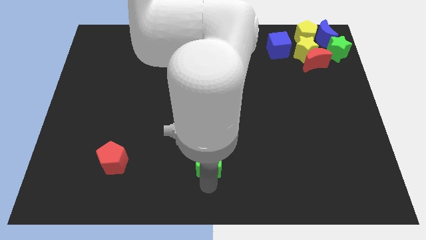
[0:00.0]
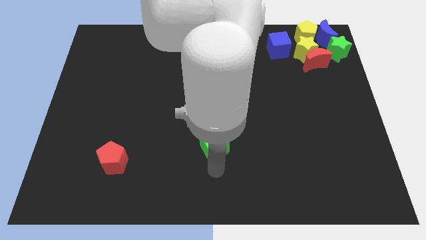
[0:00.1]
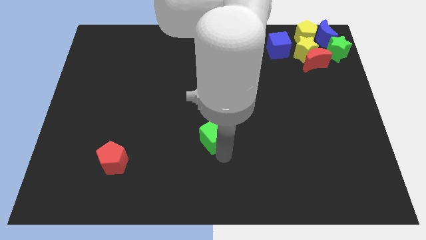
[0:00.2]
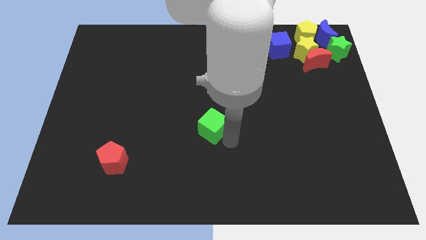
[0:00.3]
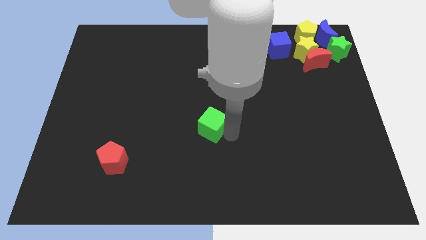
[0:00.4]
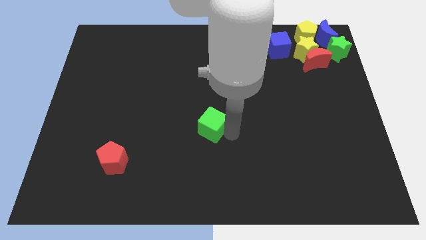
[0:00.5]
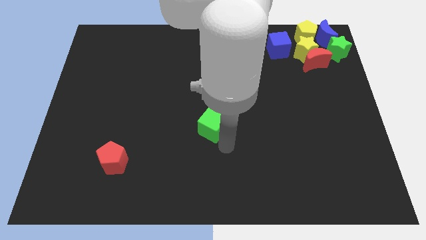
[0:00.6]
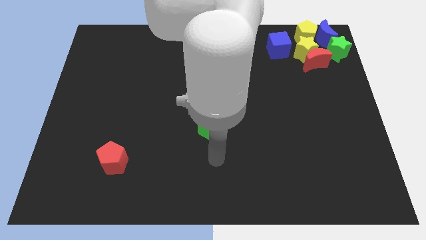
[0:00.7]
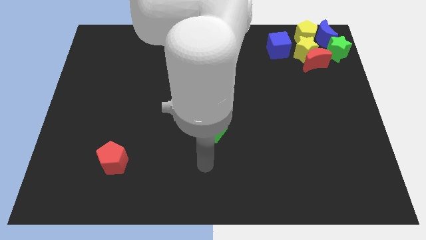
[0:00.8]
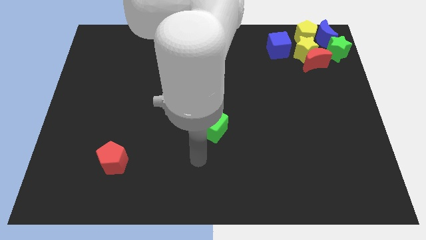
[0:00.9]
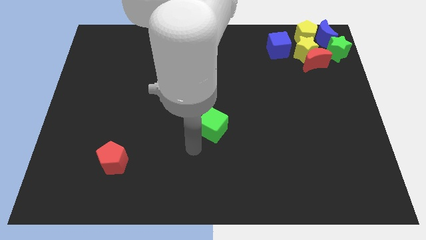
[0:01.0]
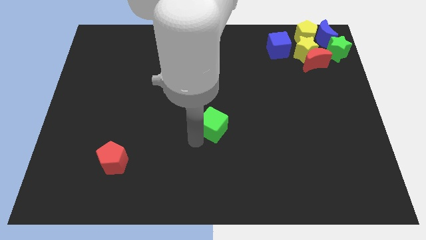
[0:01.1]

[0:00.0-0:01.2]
push the green cube towards center

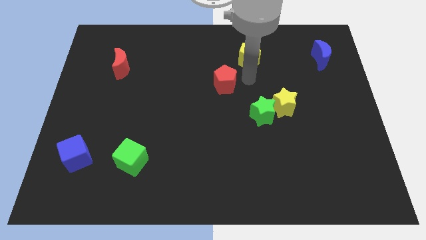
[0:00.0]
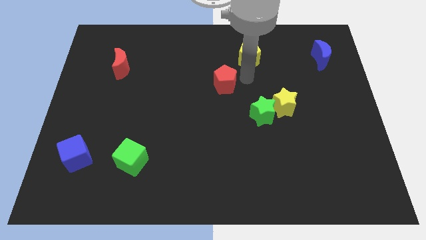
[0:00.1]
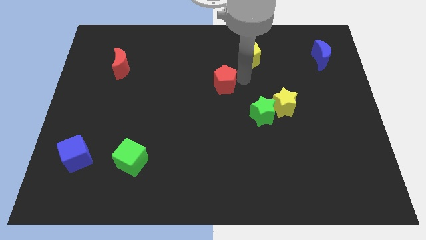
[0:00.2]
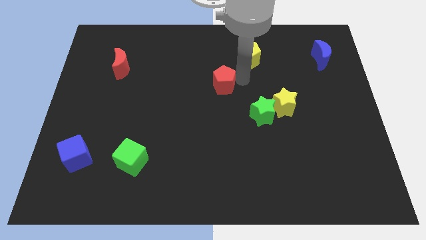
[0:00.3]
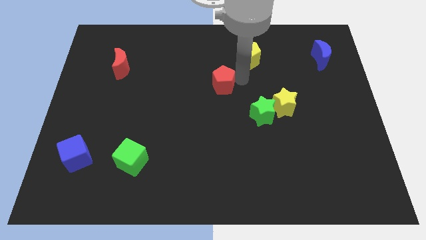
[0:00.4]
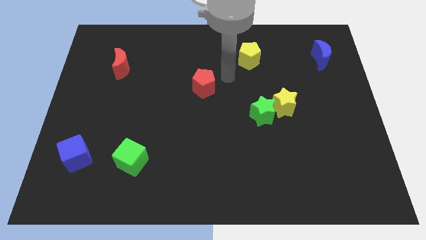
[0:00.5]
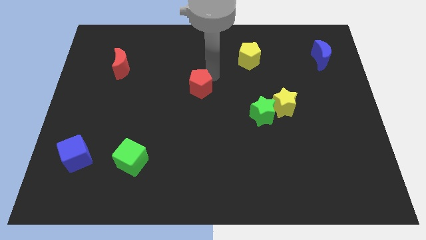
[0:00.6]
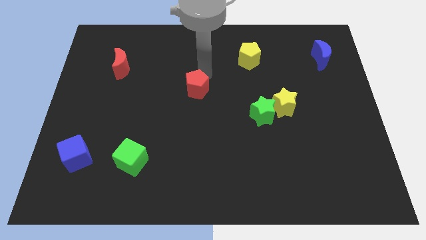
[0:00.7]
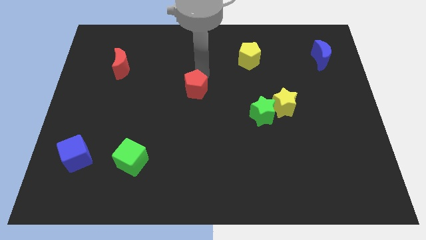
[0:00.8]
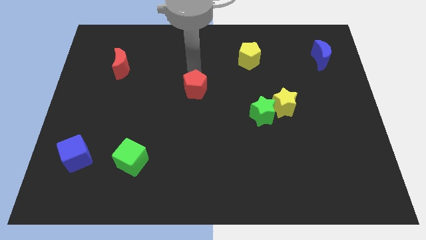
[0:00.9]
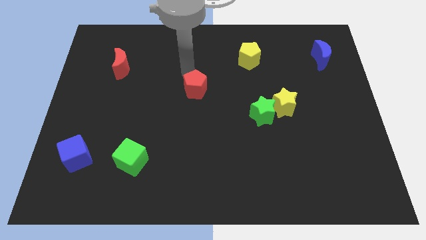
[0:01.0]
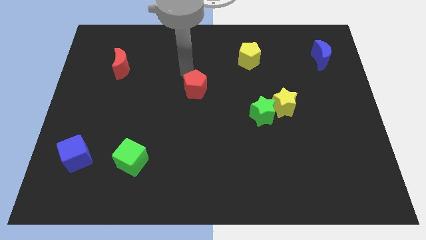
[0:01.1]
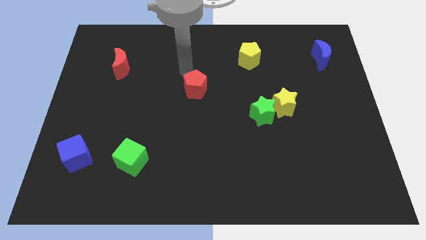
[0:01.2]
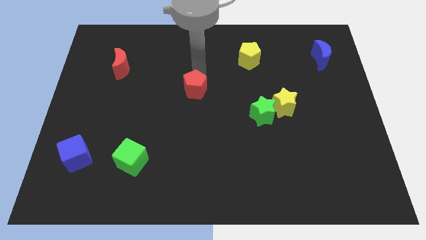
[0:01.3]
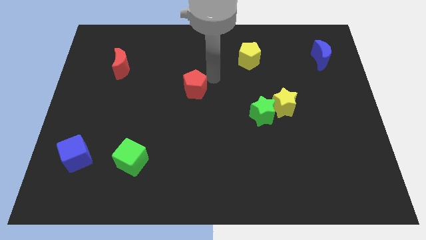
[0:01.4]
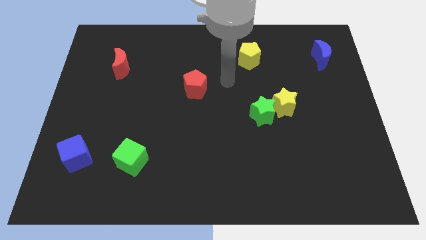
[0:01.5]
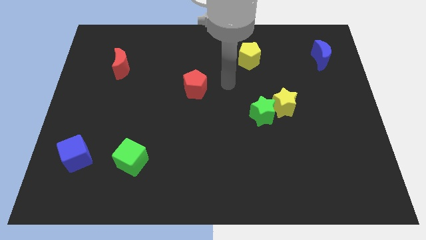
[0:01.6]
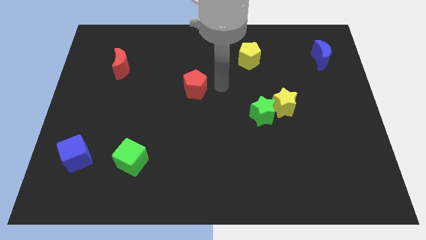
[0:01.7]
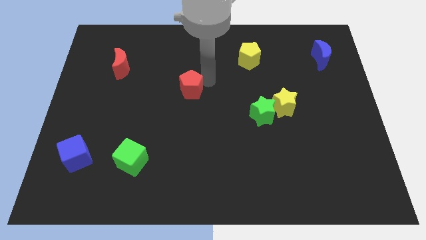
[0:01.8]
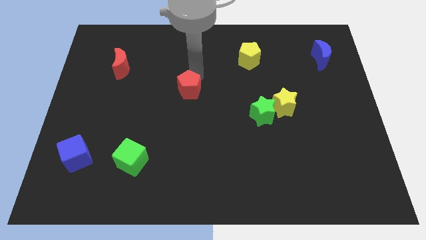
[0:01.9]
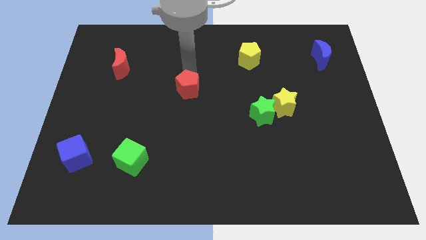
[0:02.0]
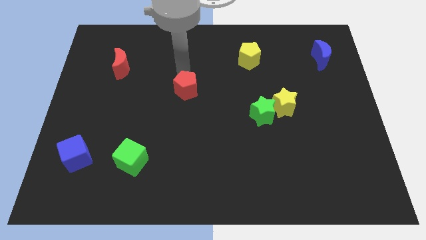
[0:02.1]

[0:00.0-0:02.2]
move the red pentagon to the center

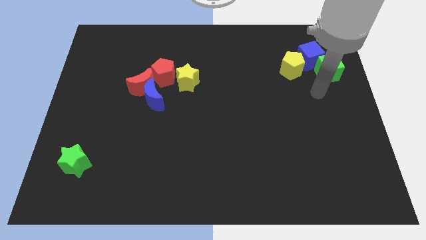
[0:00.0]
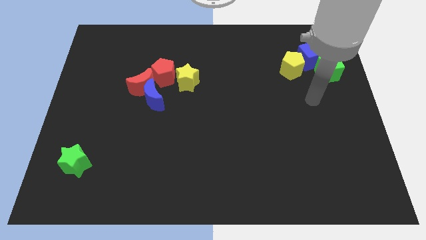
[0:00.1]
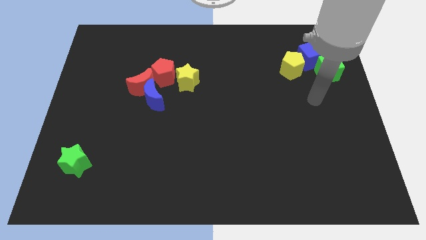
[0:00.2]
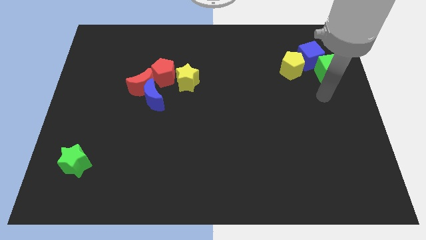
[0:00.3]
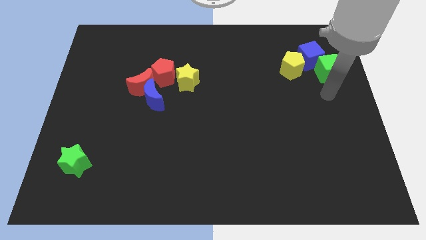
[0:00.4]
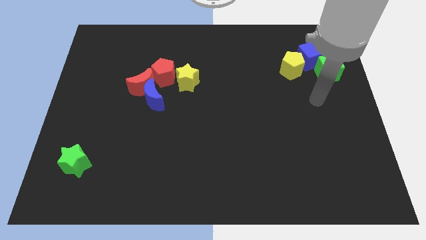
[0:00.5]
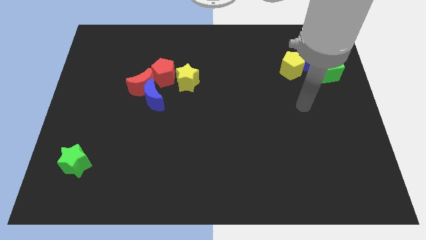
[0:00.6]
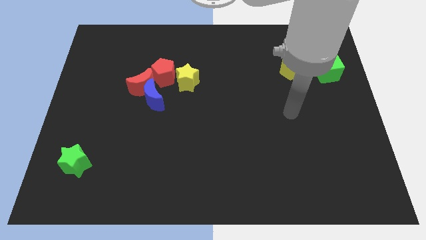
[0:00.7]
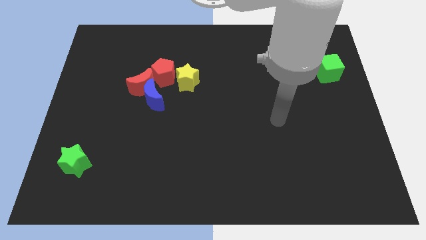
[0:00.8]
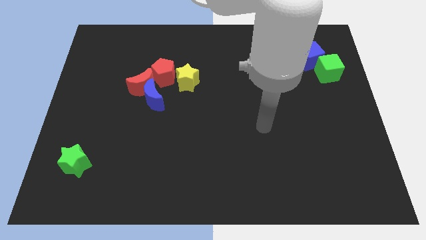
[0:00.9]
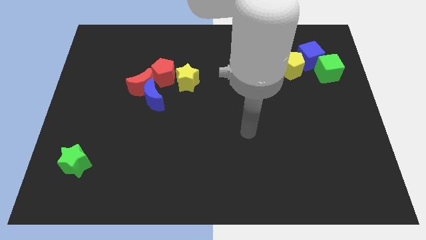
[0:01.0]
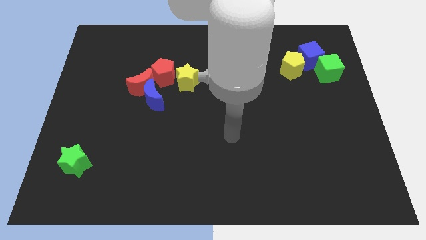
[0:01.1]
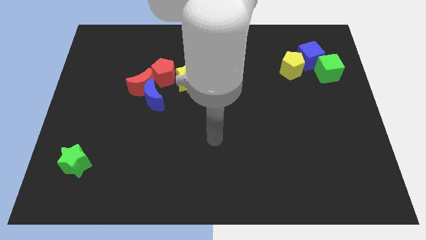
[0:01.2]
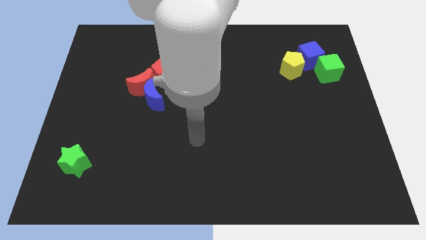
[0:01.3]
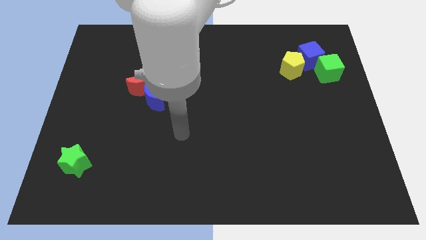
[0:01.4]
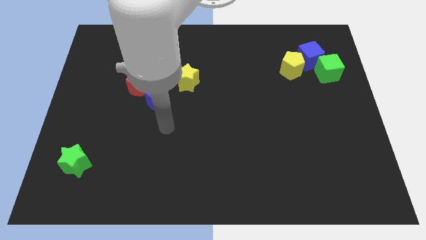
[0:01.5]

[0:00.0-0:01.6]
move your arm towards the left side of the board

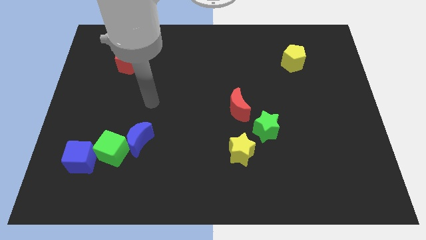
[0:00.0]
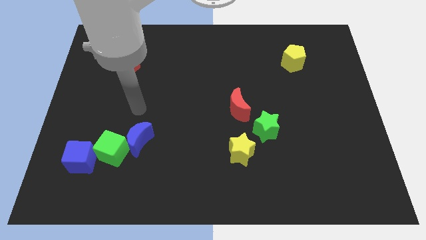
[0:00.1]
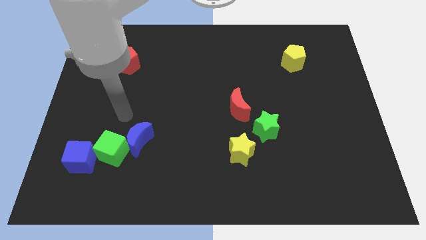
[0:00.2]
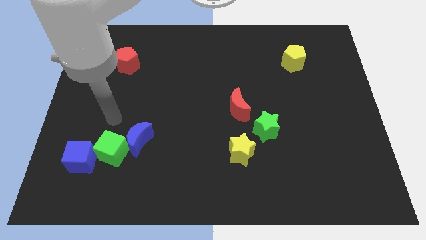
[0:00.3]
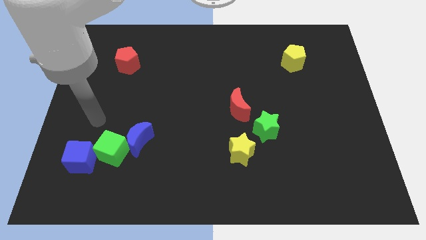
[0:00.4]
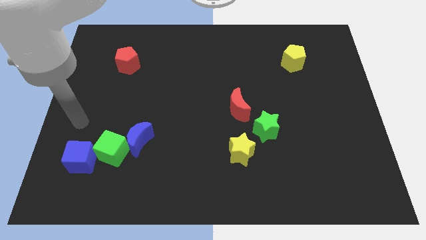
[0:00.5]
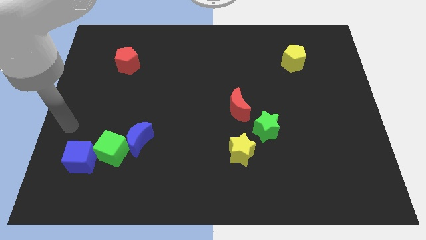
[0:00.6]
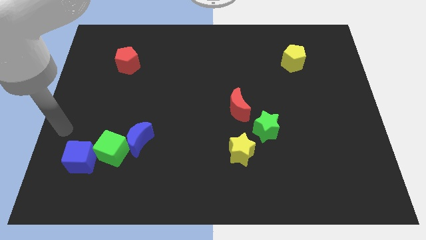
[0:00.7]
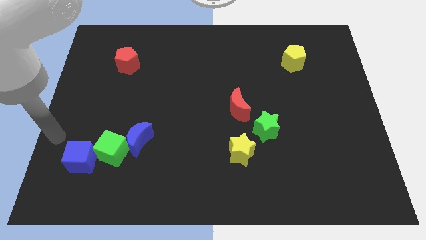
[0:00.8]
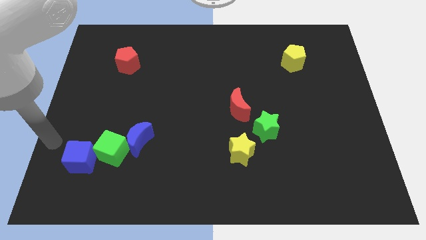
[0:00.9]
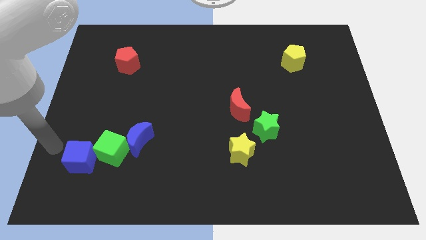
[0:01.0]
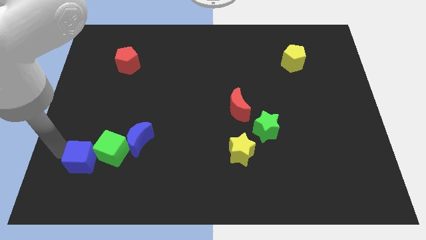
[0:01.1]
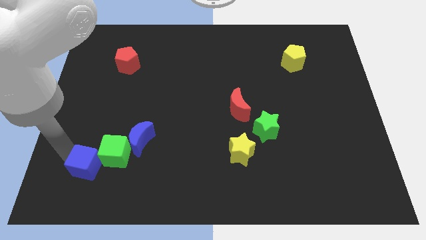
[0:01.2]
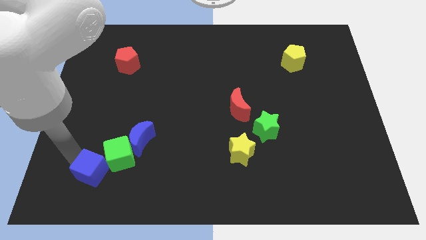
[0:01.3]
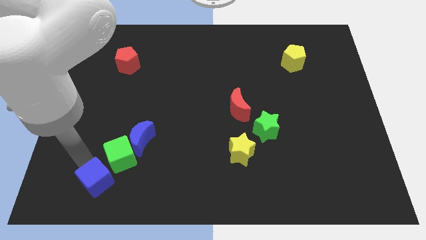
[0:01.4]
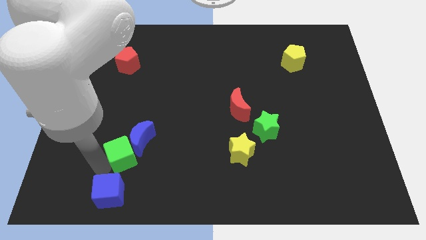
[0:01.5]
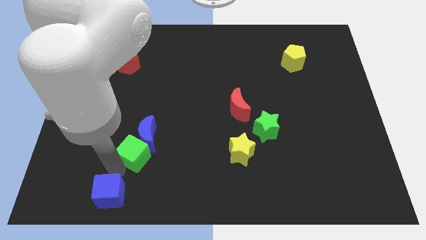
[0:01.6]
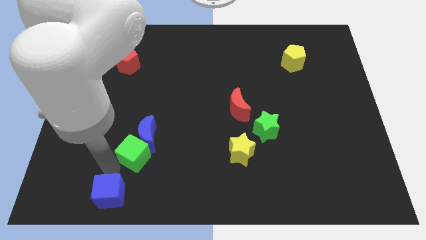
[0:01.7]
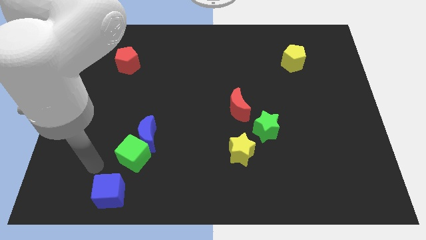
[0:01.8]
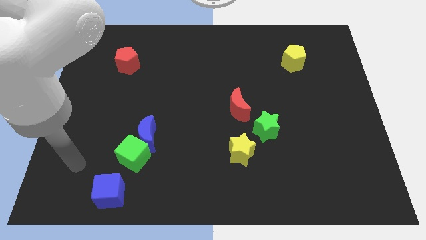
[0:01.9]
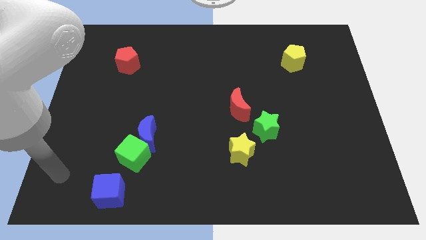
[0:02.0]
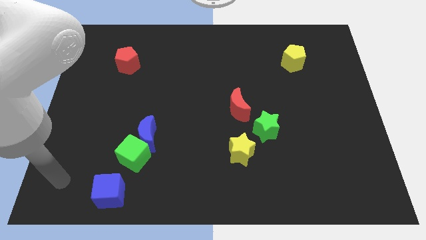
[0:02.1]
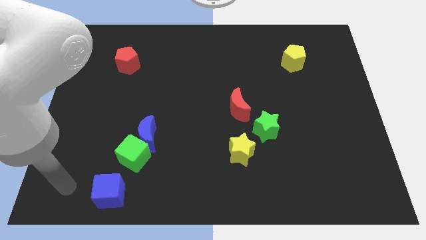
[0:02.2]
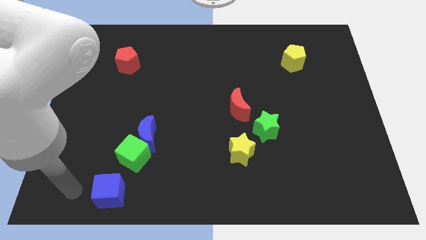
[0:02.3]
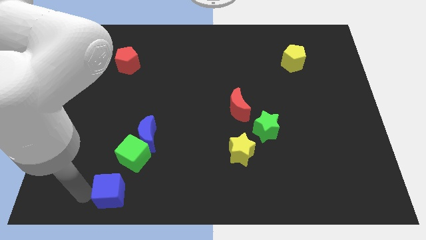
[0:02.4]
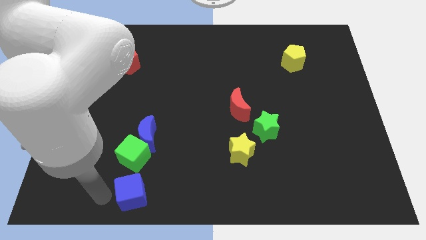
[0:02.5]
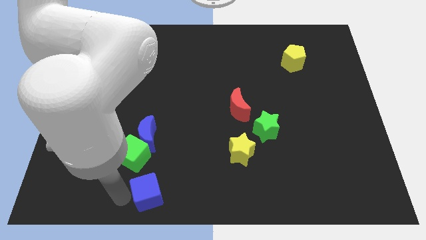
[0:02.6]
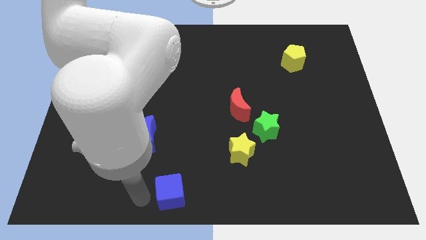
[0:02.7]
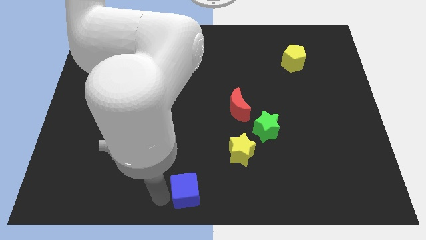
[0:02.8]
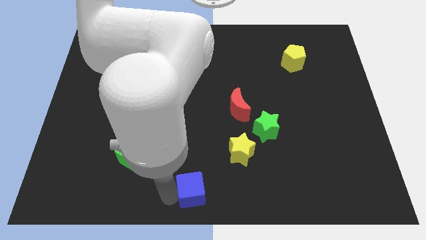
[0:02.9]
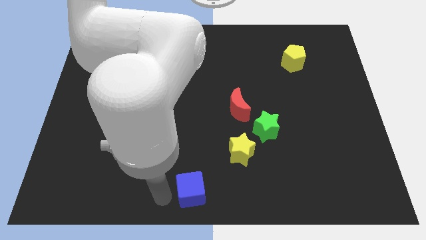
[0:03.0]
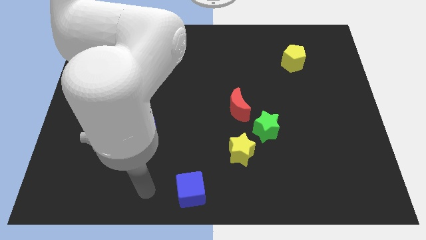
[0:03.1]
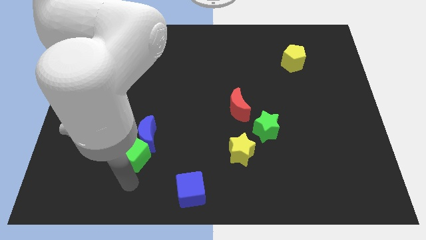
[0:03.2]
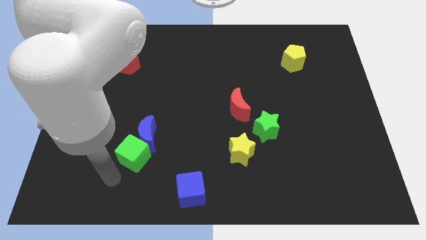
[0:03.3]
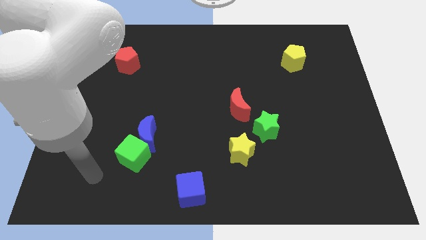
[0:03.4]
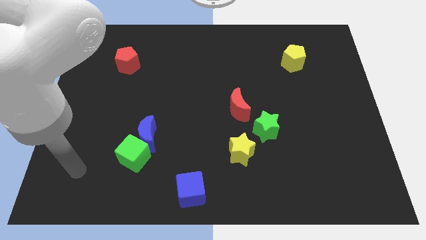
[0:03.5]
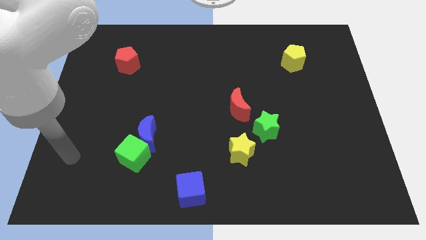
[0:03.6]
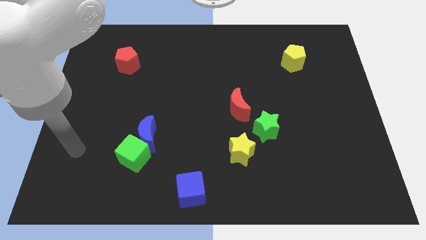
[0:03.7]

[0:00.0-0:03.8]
move the blue cube to the bottom center of the board

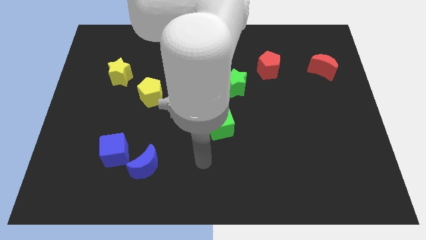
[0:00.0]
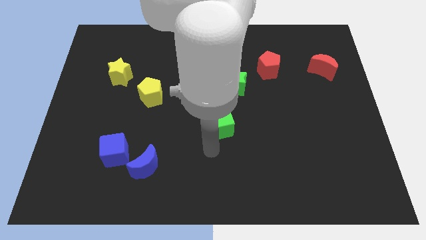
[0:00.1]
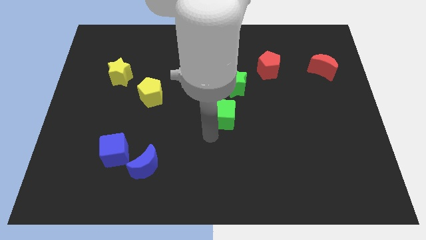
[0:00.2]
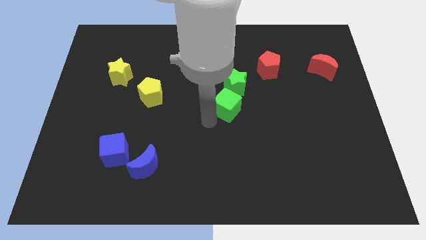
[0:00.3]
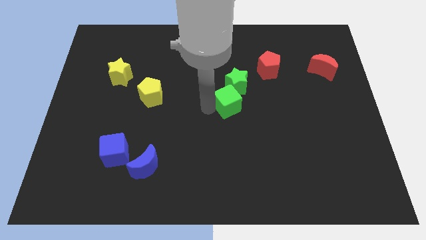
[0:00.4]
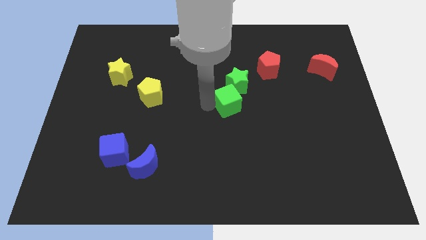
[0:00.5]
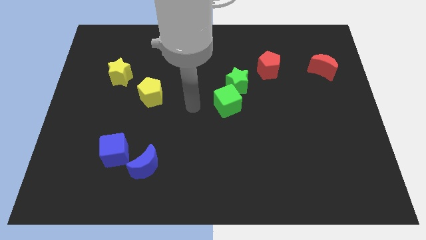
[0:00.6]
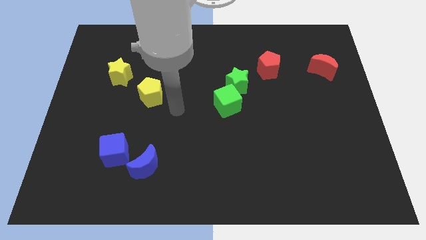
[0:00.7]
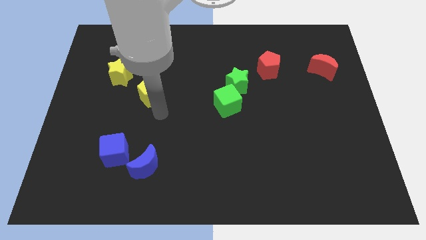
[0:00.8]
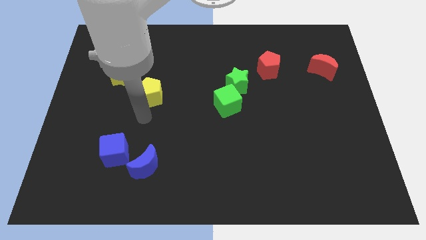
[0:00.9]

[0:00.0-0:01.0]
push the green star with the help of the green cube towards the top right of the board
